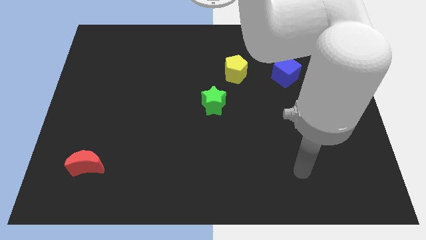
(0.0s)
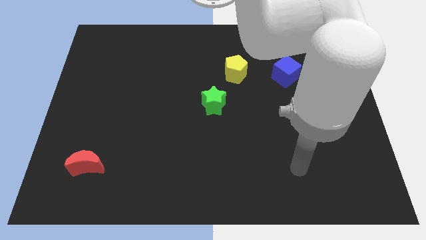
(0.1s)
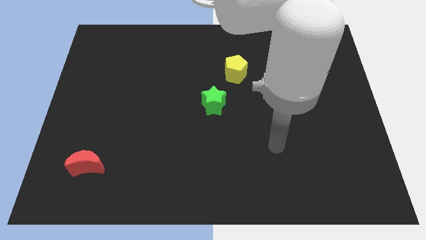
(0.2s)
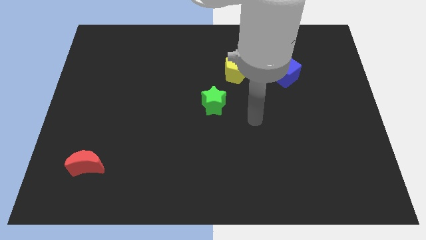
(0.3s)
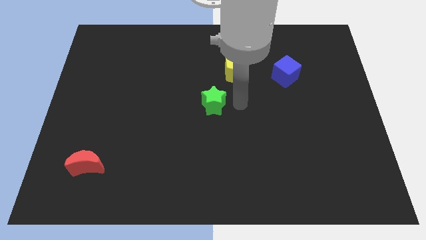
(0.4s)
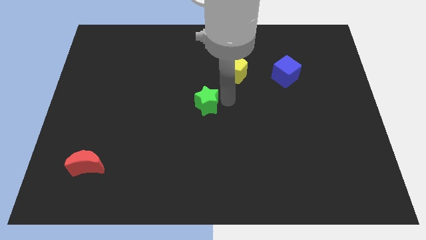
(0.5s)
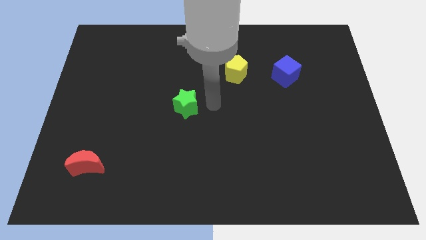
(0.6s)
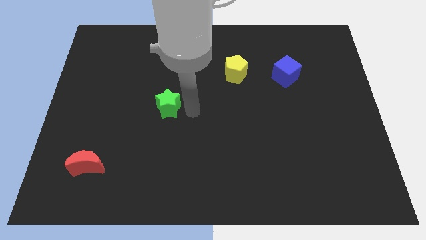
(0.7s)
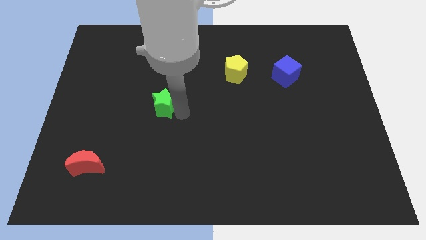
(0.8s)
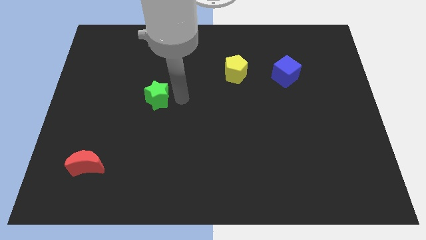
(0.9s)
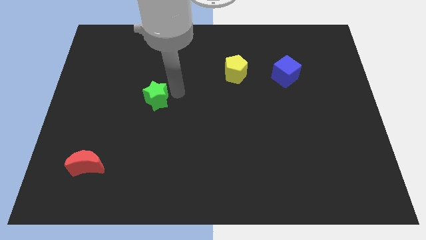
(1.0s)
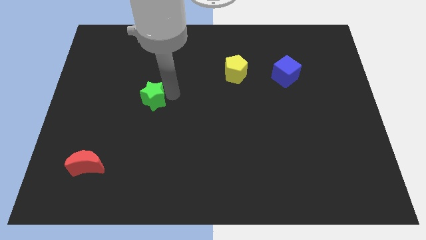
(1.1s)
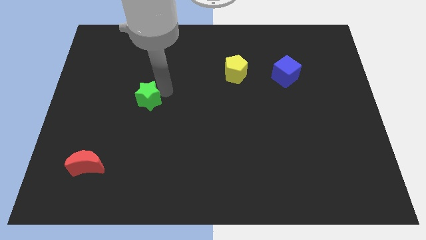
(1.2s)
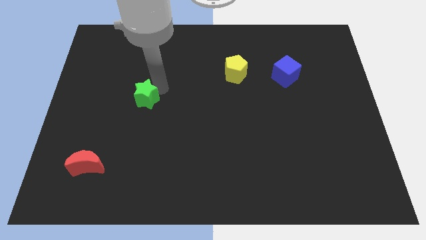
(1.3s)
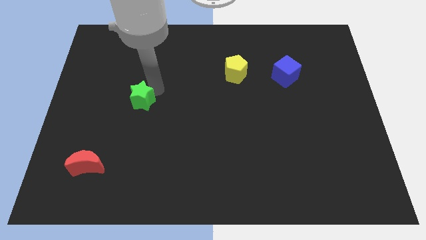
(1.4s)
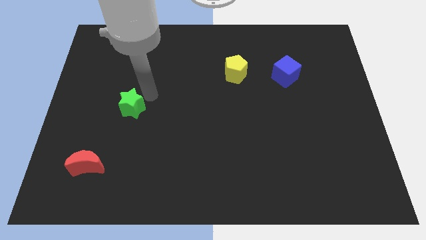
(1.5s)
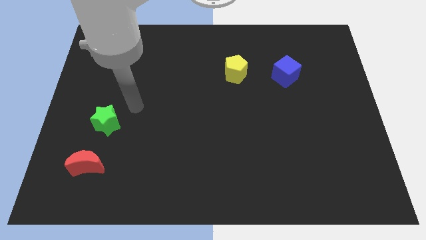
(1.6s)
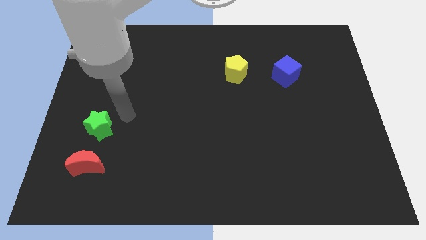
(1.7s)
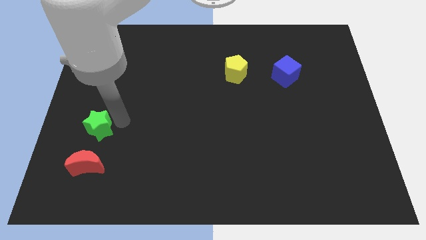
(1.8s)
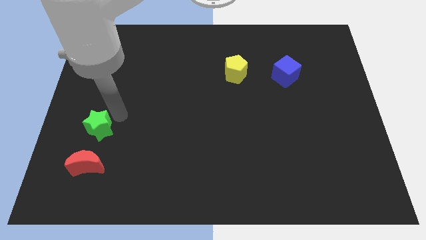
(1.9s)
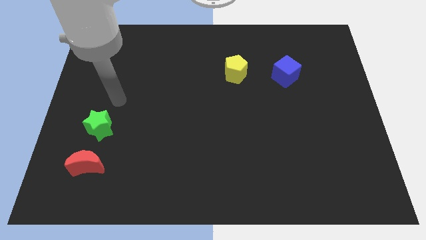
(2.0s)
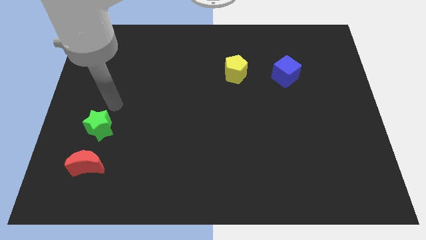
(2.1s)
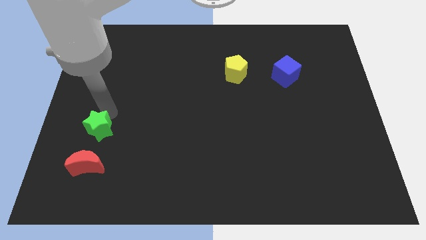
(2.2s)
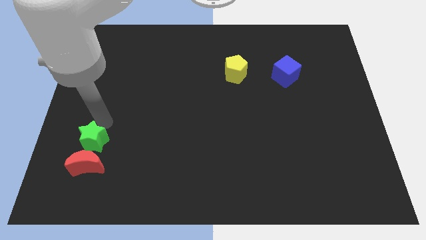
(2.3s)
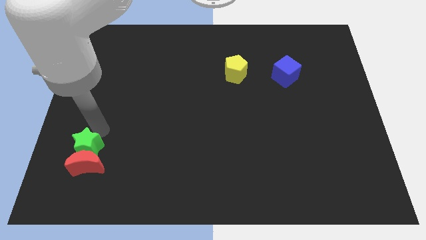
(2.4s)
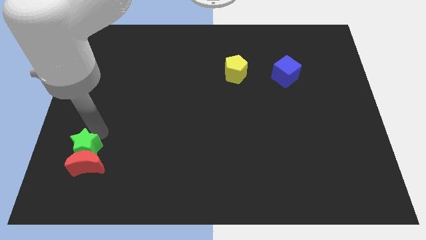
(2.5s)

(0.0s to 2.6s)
slide the star close to the red moon

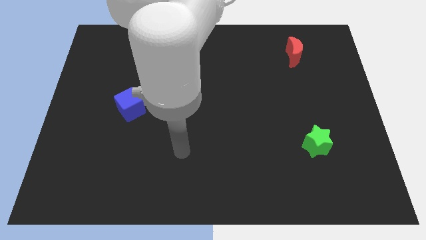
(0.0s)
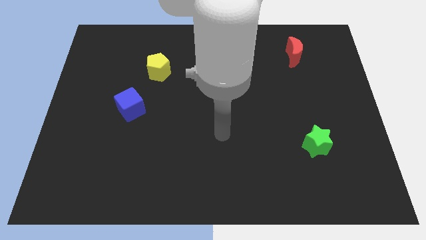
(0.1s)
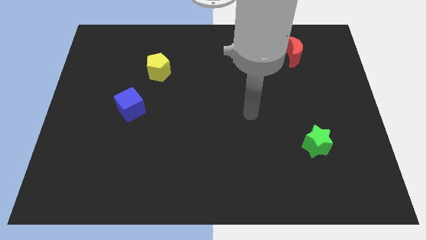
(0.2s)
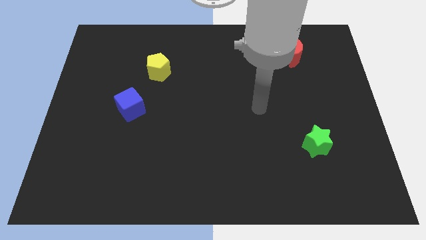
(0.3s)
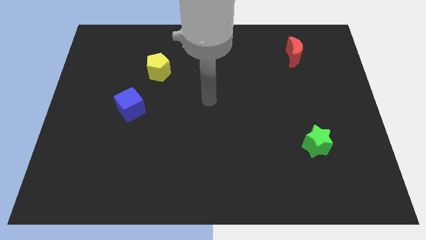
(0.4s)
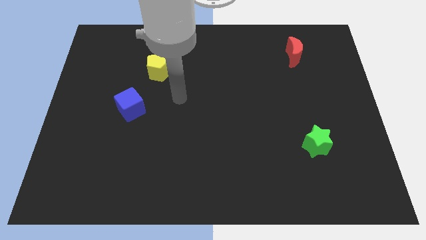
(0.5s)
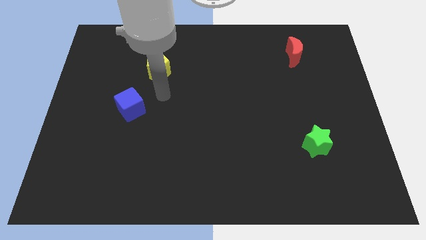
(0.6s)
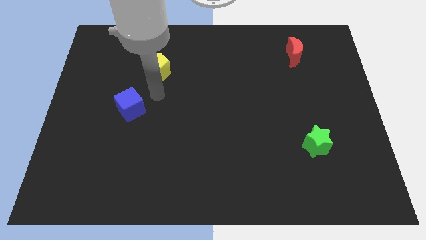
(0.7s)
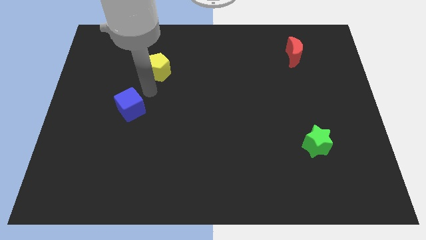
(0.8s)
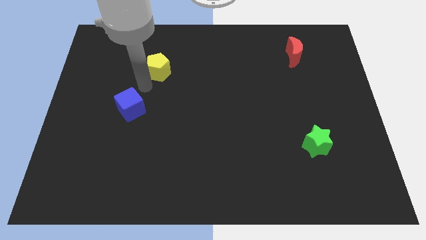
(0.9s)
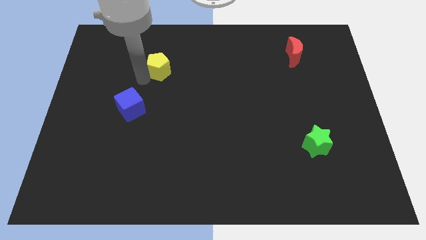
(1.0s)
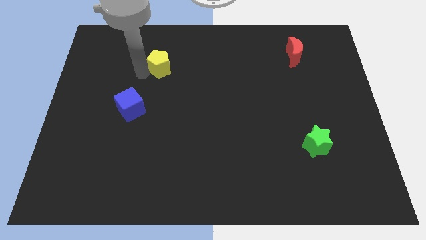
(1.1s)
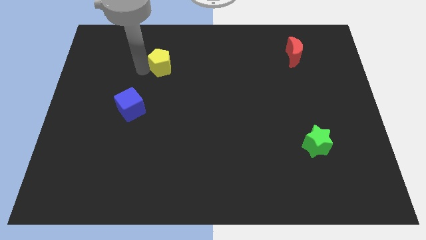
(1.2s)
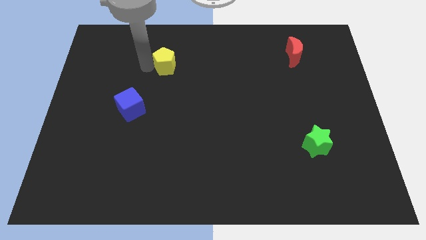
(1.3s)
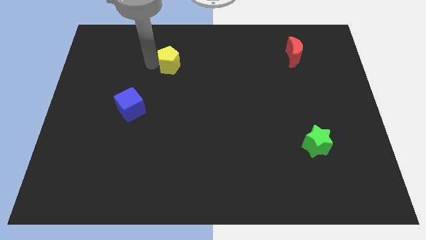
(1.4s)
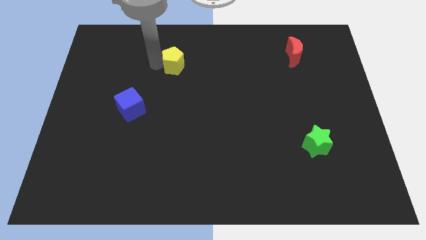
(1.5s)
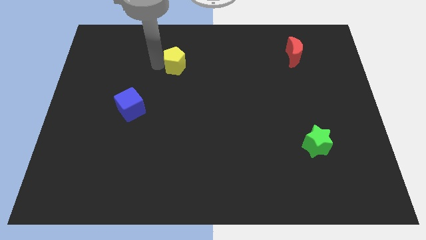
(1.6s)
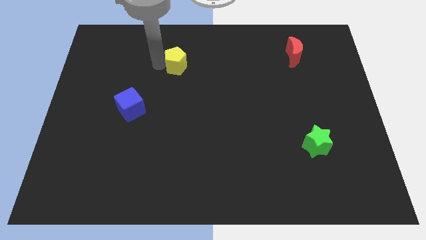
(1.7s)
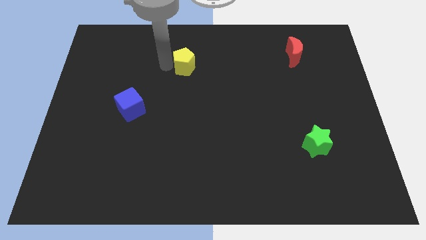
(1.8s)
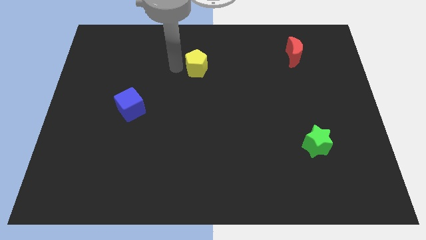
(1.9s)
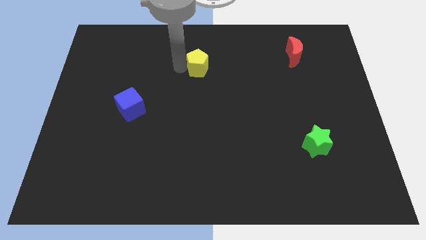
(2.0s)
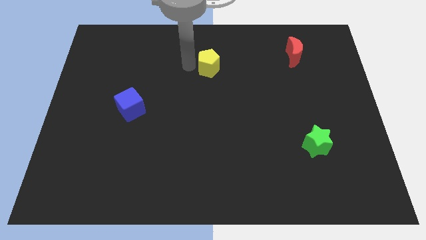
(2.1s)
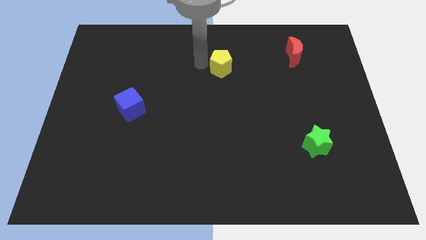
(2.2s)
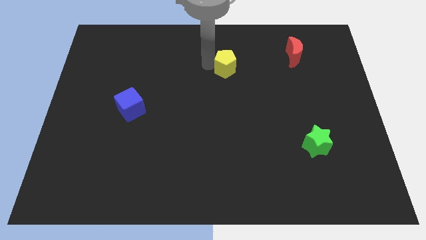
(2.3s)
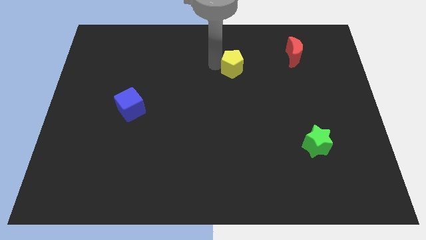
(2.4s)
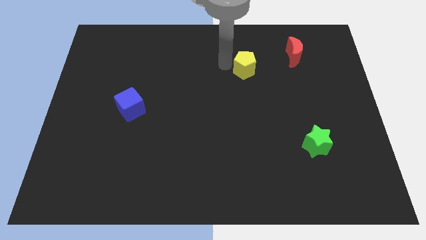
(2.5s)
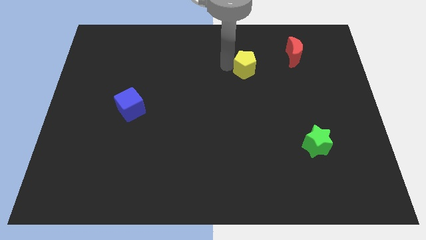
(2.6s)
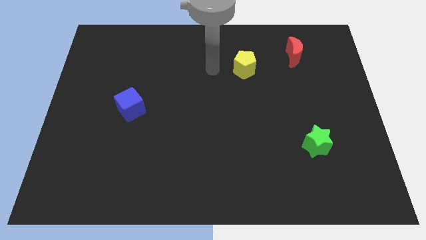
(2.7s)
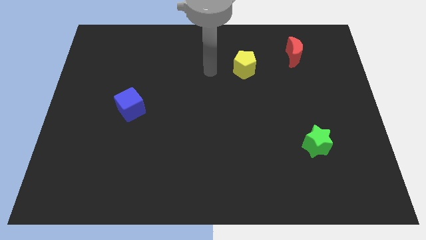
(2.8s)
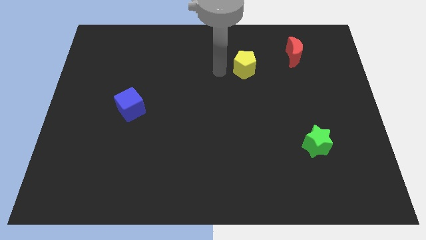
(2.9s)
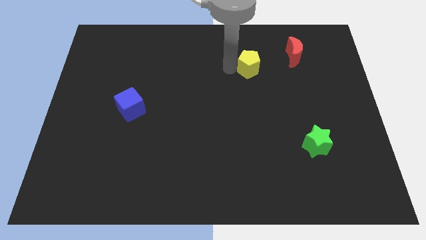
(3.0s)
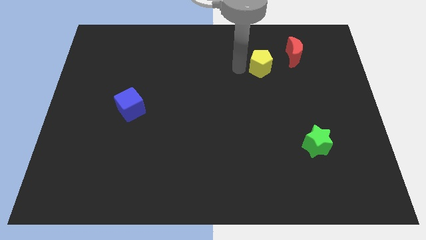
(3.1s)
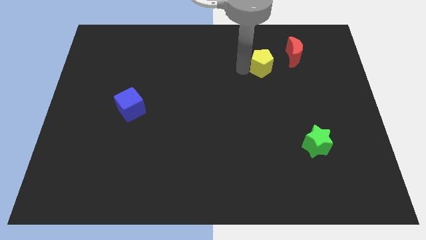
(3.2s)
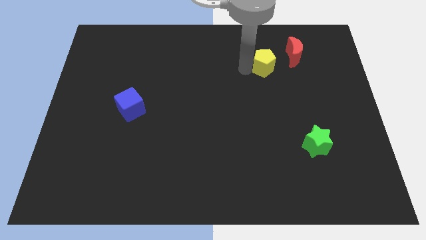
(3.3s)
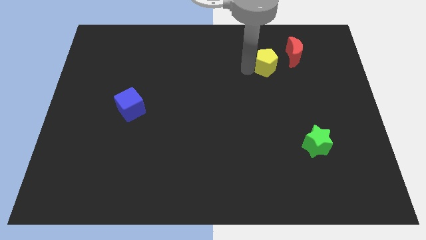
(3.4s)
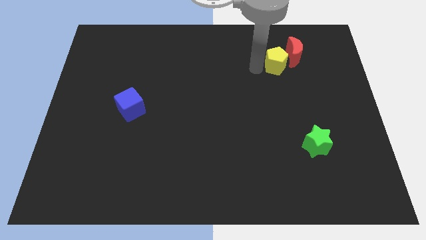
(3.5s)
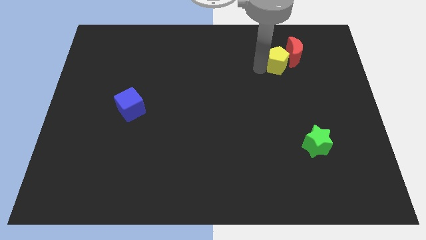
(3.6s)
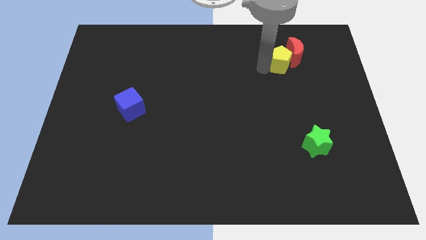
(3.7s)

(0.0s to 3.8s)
push the pentagon towards the moon

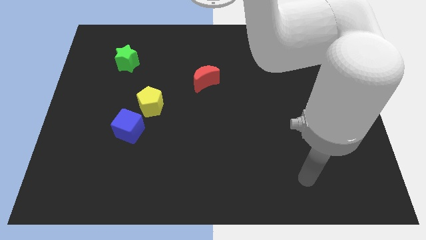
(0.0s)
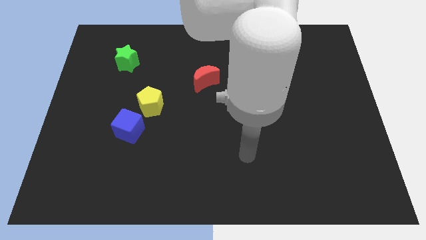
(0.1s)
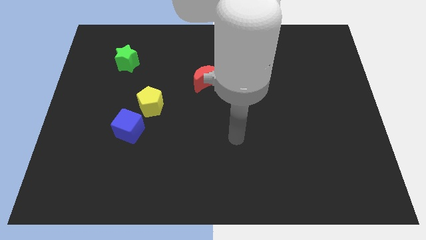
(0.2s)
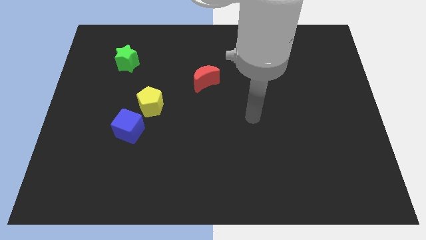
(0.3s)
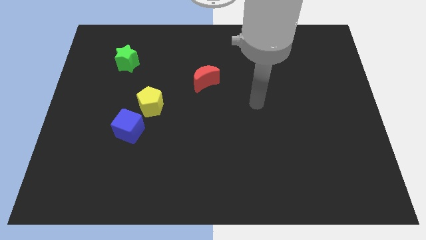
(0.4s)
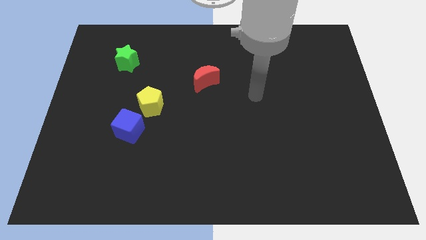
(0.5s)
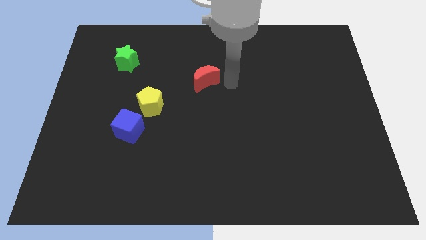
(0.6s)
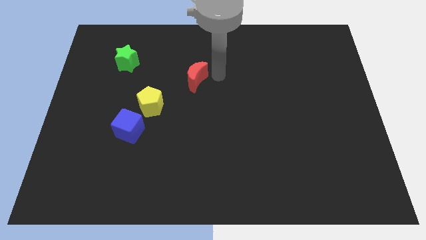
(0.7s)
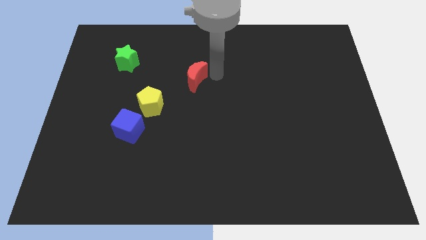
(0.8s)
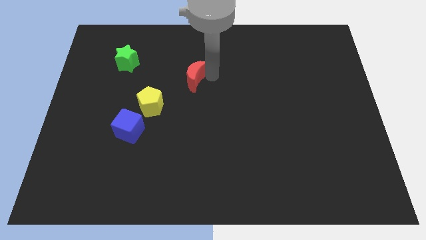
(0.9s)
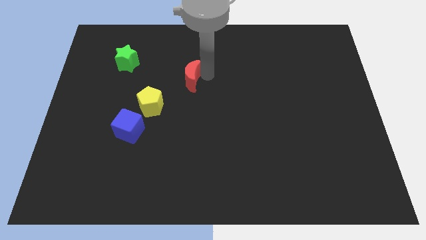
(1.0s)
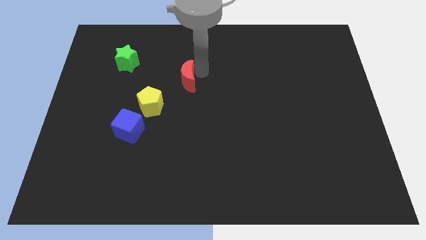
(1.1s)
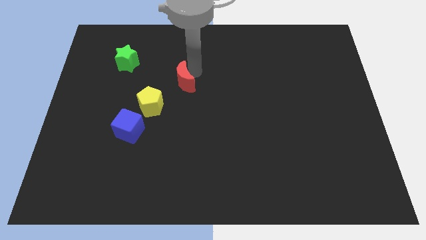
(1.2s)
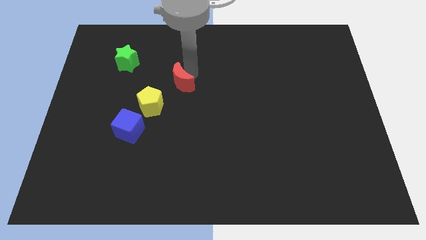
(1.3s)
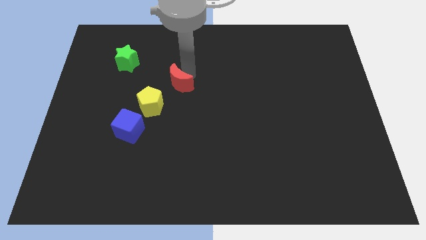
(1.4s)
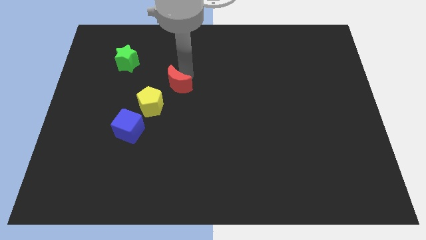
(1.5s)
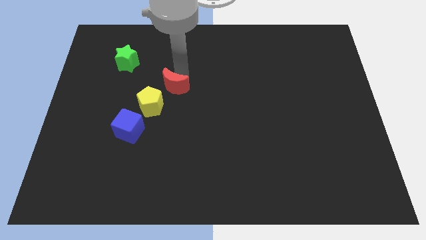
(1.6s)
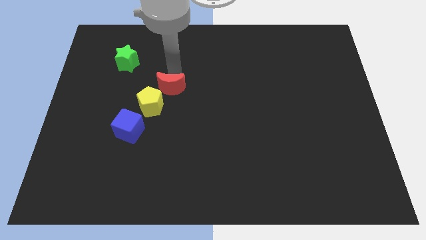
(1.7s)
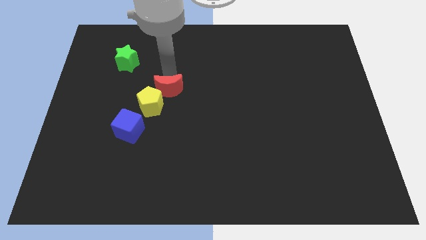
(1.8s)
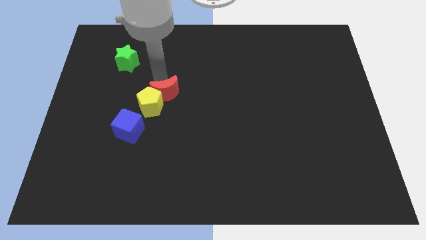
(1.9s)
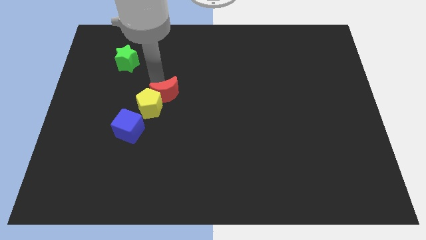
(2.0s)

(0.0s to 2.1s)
push the red block close to the yellow pentagon
